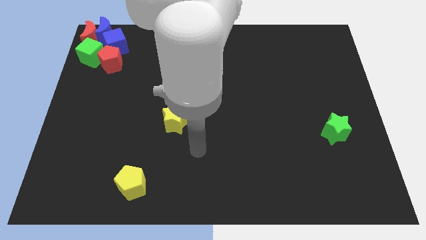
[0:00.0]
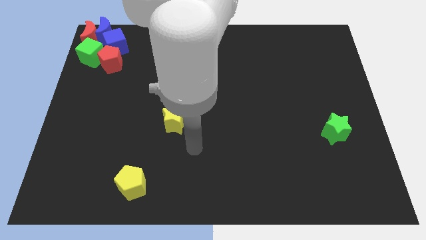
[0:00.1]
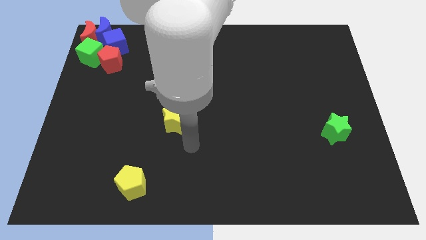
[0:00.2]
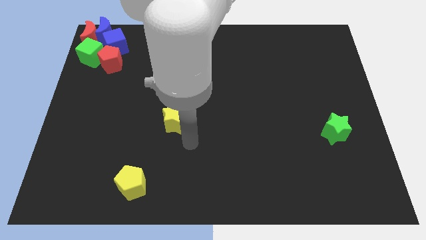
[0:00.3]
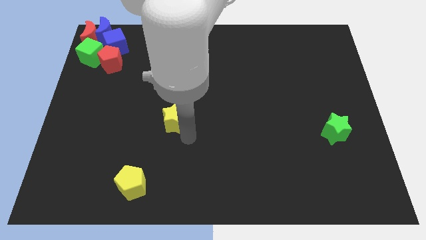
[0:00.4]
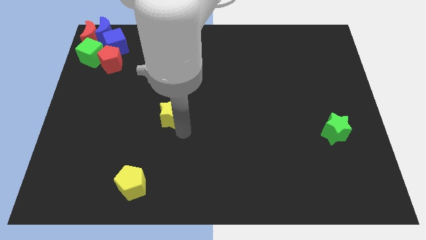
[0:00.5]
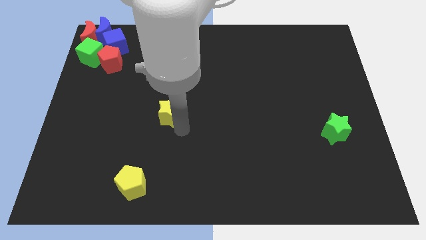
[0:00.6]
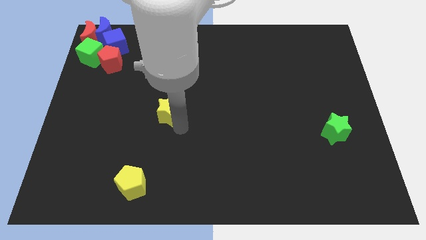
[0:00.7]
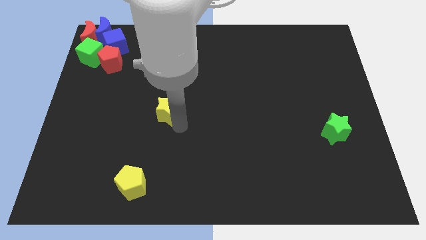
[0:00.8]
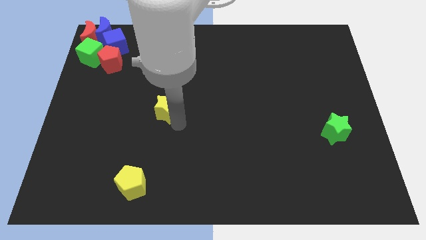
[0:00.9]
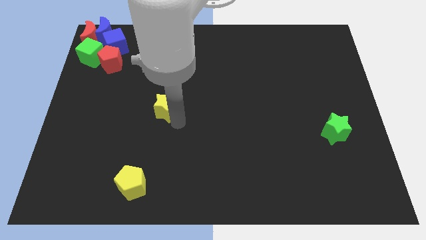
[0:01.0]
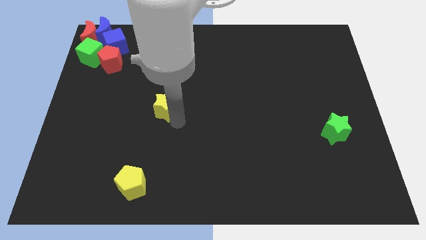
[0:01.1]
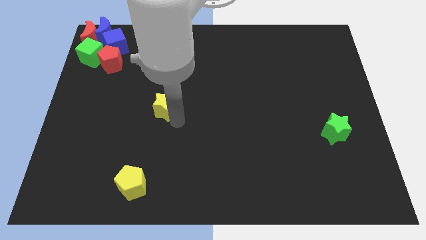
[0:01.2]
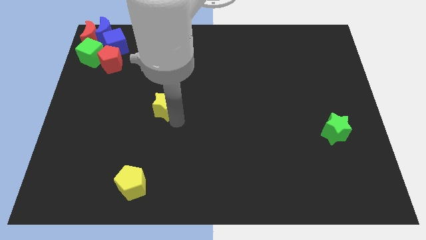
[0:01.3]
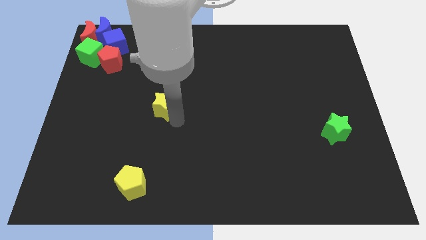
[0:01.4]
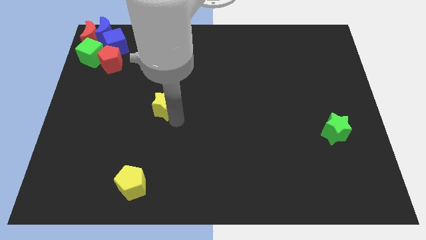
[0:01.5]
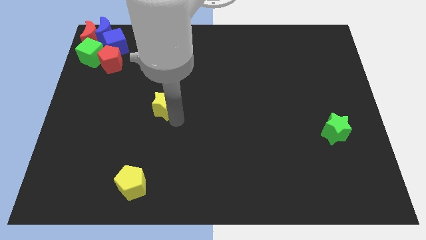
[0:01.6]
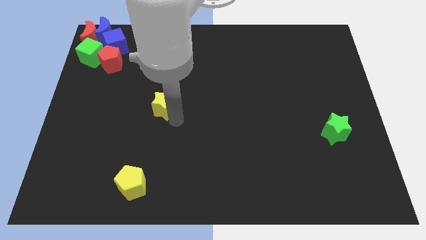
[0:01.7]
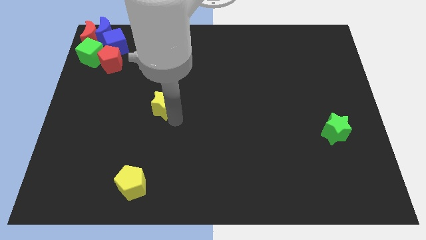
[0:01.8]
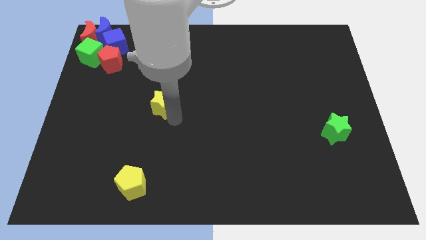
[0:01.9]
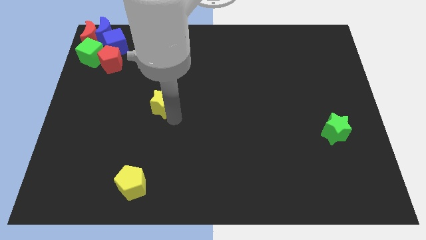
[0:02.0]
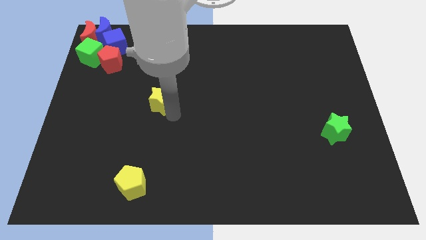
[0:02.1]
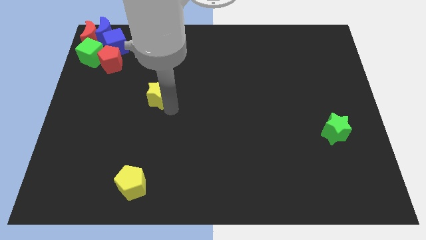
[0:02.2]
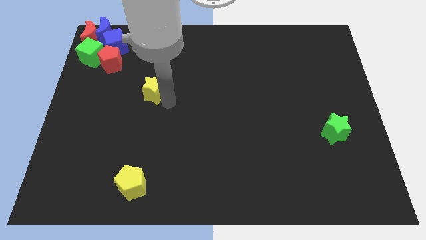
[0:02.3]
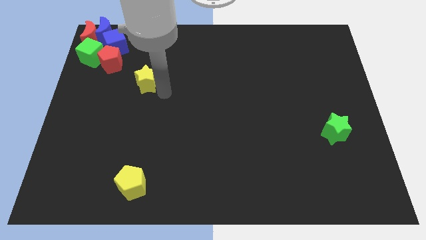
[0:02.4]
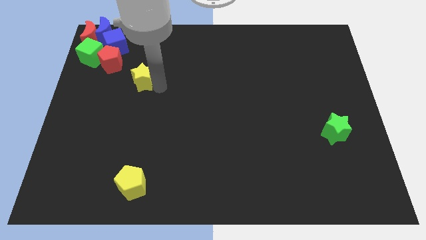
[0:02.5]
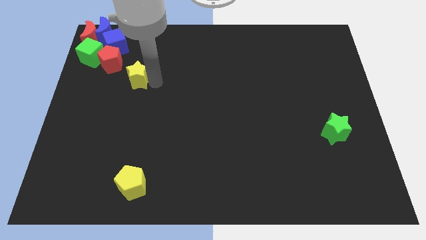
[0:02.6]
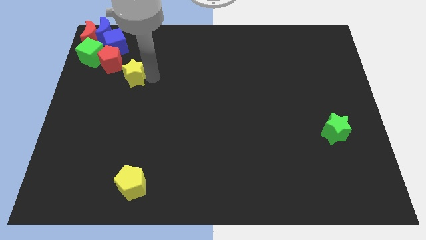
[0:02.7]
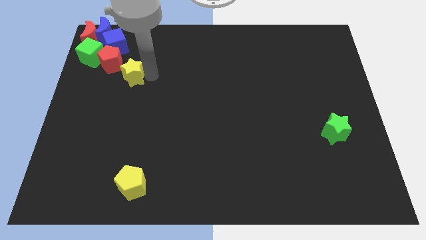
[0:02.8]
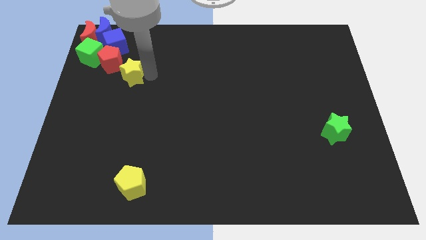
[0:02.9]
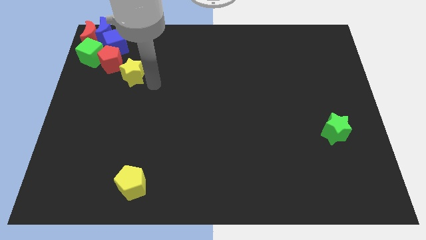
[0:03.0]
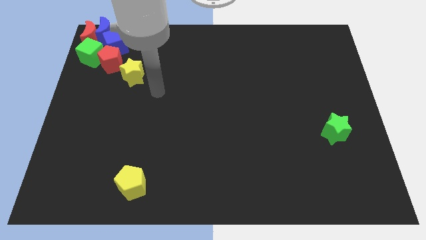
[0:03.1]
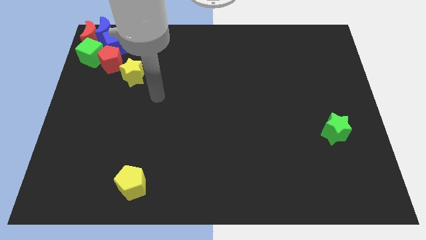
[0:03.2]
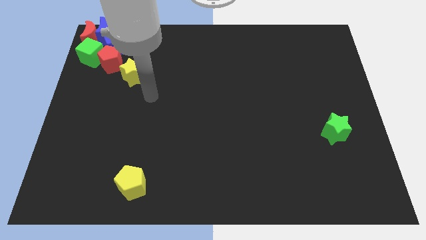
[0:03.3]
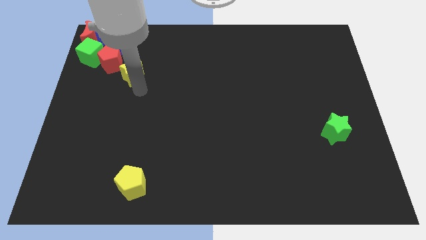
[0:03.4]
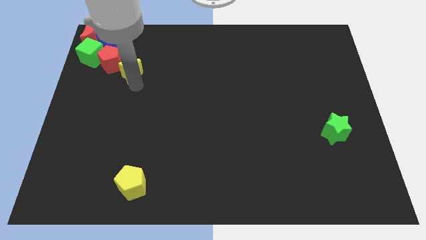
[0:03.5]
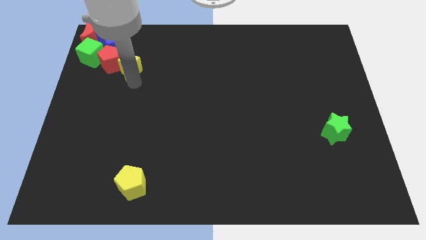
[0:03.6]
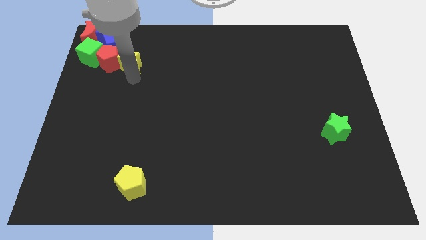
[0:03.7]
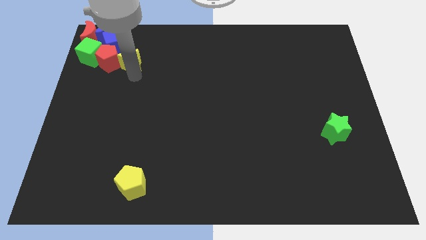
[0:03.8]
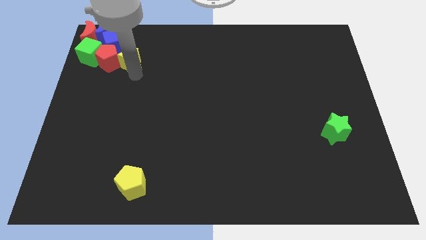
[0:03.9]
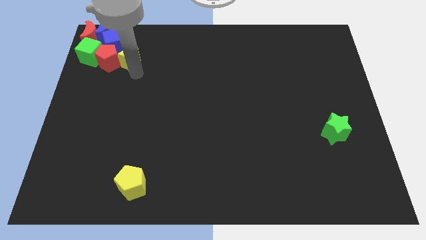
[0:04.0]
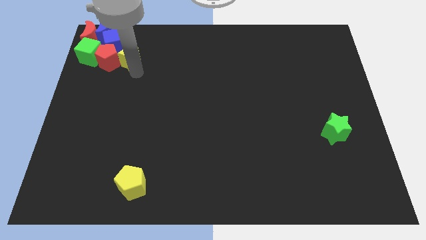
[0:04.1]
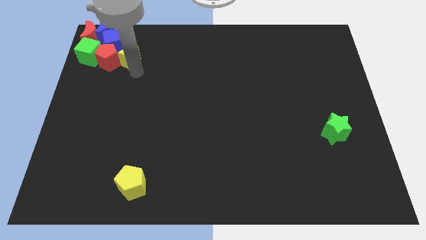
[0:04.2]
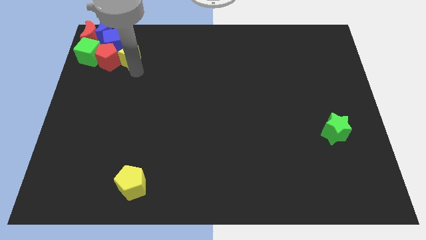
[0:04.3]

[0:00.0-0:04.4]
push the yellow star into the red pentagon

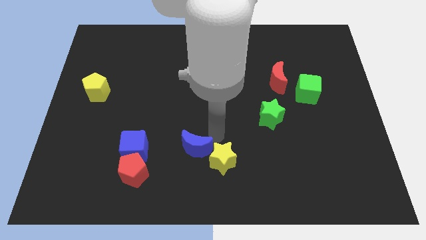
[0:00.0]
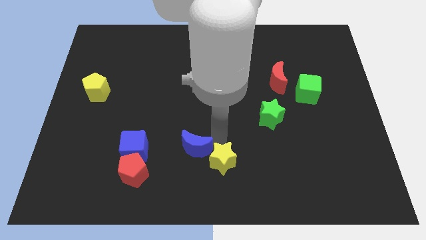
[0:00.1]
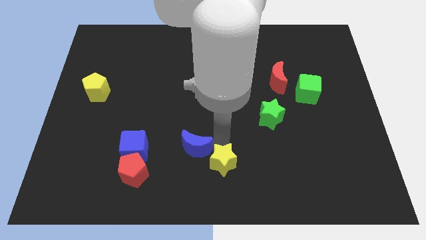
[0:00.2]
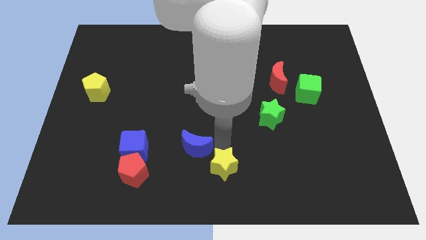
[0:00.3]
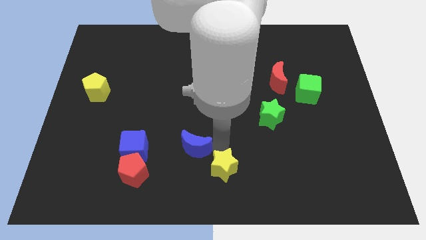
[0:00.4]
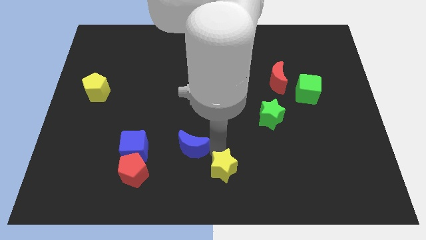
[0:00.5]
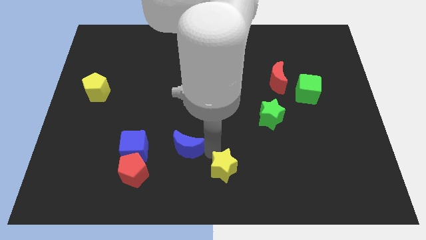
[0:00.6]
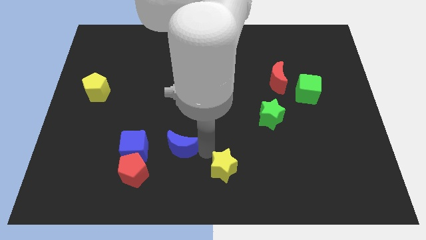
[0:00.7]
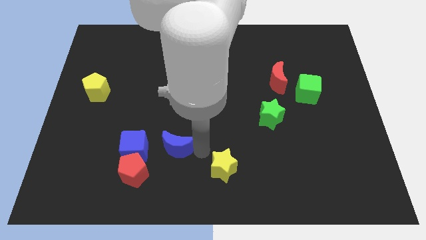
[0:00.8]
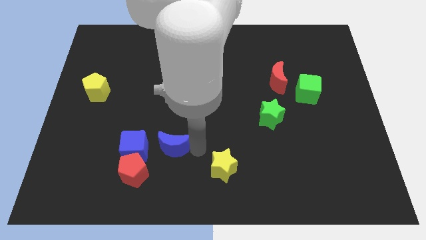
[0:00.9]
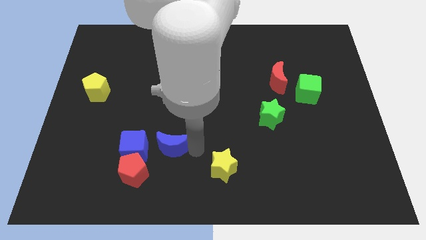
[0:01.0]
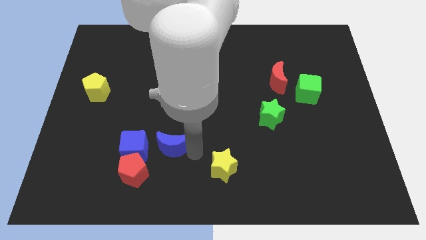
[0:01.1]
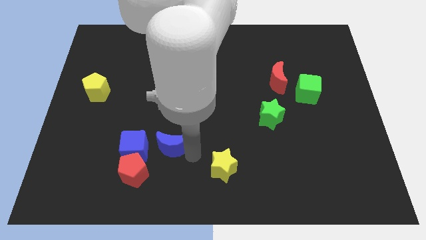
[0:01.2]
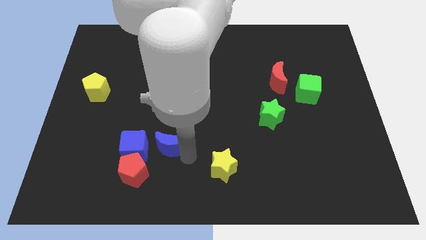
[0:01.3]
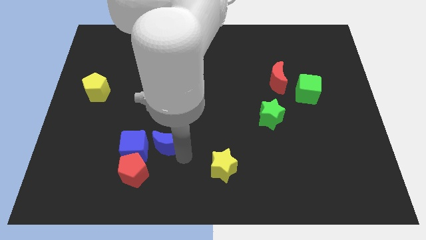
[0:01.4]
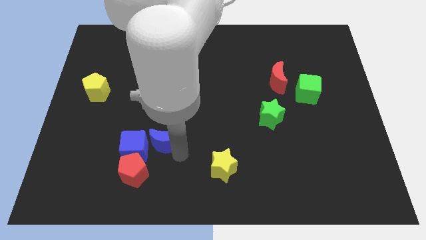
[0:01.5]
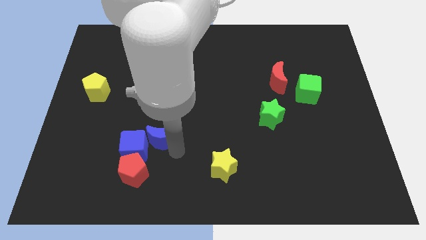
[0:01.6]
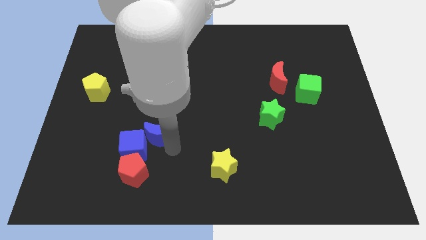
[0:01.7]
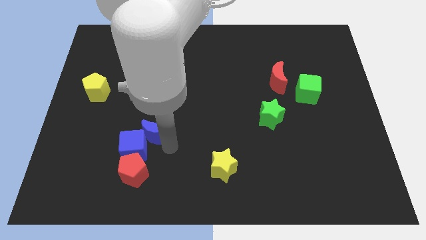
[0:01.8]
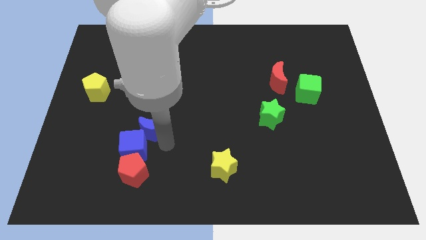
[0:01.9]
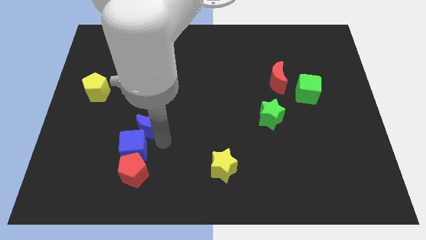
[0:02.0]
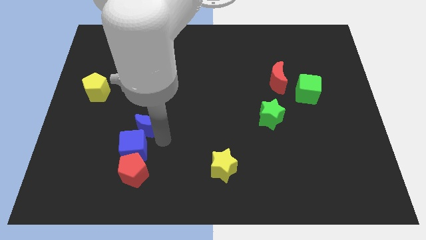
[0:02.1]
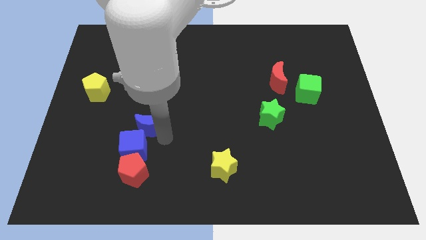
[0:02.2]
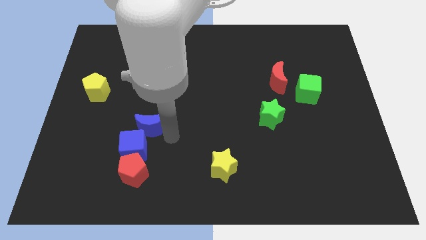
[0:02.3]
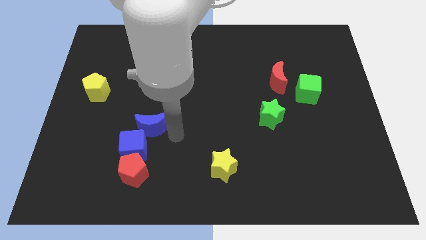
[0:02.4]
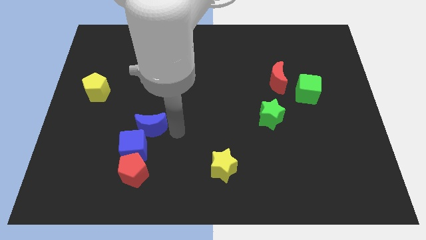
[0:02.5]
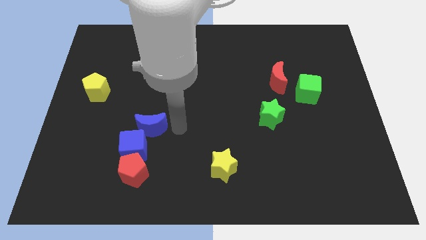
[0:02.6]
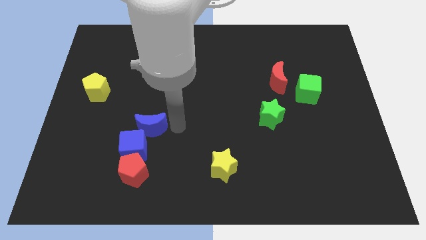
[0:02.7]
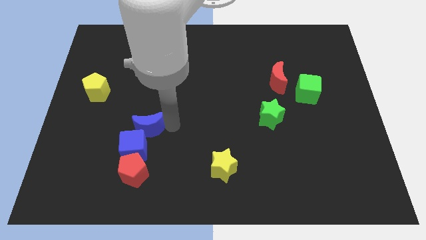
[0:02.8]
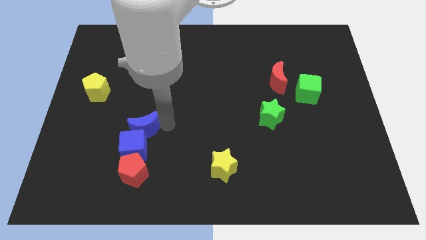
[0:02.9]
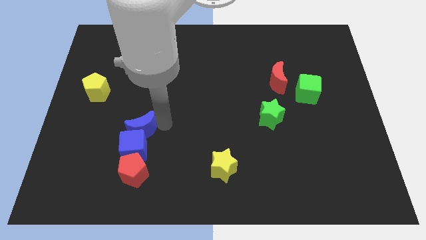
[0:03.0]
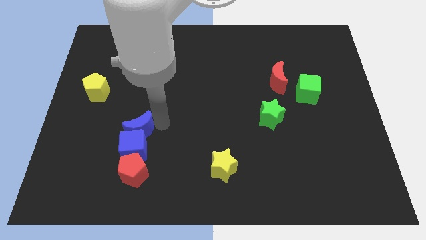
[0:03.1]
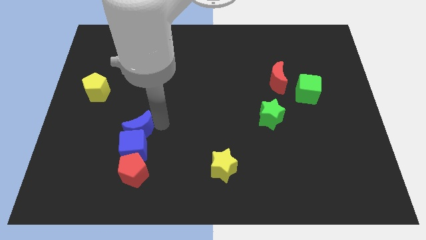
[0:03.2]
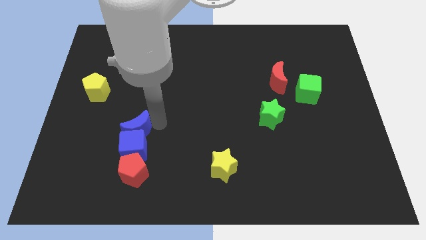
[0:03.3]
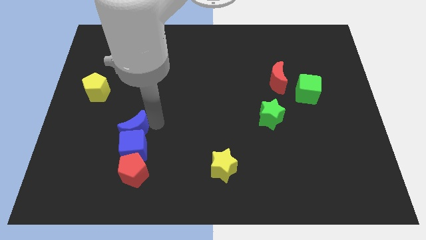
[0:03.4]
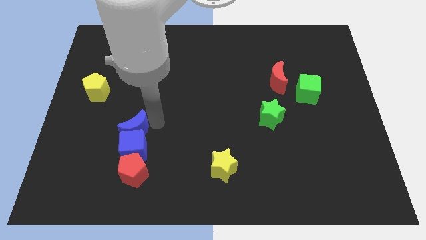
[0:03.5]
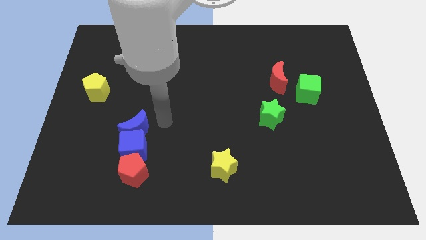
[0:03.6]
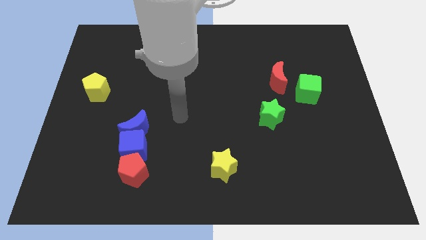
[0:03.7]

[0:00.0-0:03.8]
place the blue crescent at the top of the blue cube

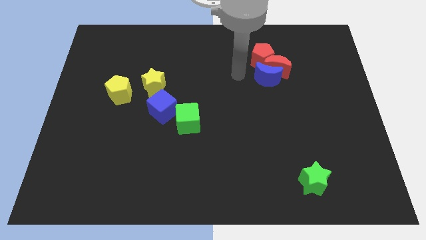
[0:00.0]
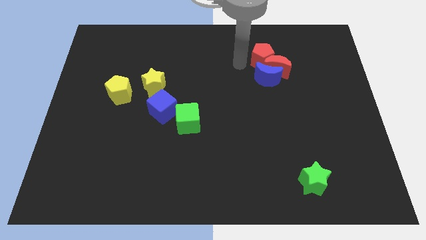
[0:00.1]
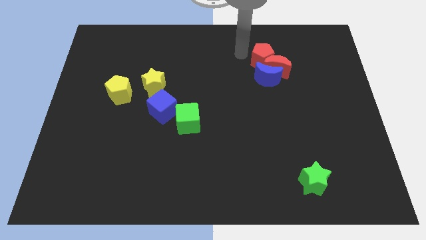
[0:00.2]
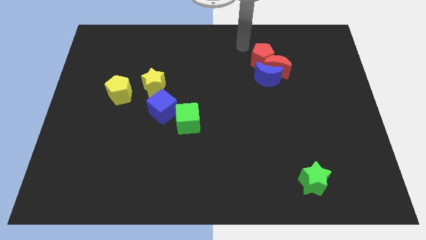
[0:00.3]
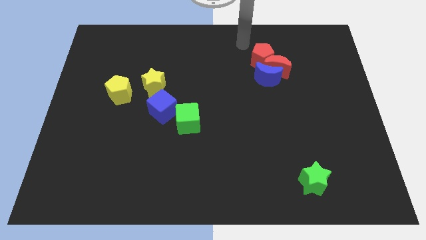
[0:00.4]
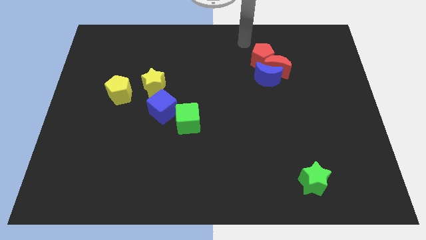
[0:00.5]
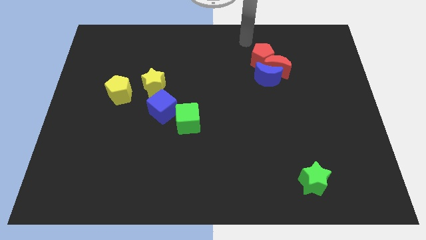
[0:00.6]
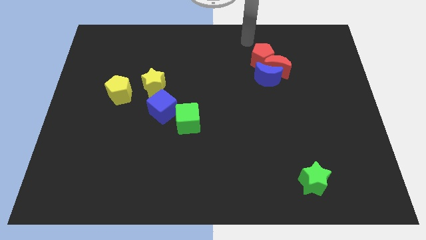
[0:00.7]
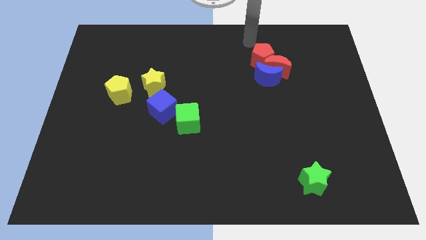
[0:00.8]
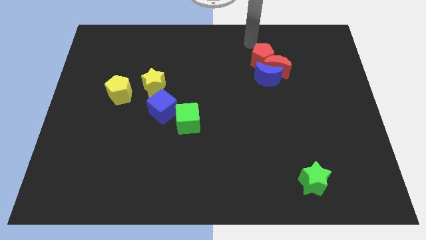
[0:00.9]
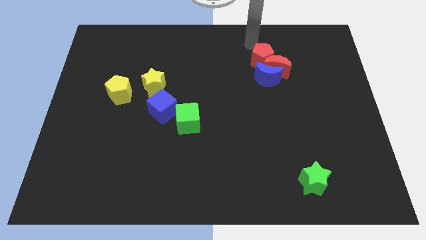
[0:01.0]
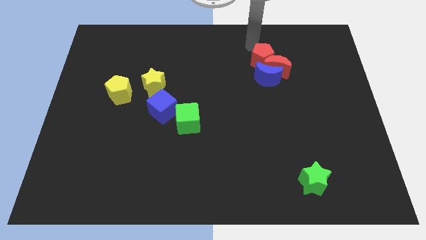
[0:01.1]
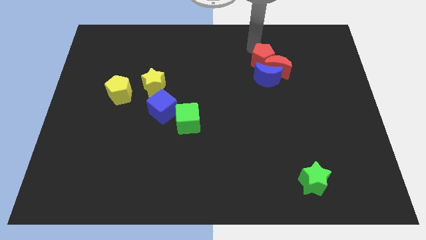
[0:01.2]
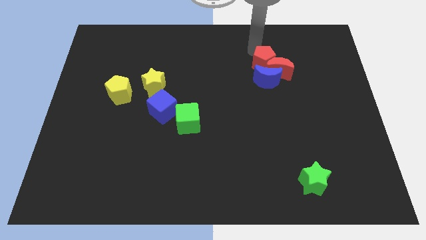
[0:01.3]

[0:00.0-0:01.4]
push red pentagon slightly downwards
